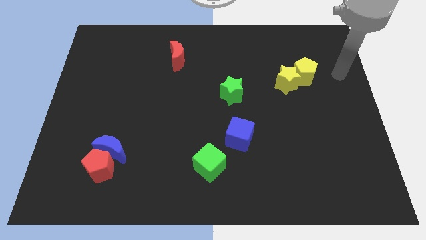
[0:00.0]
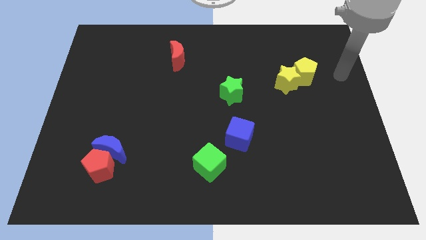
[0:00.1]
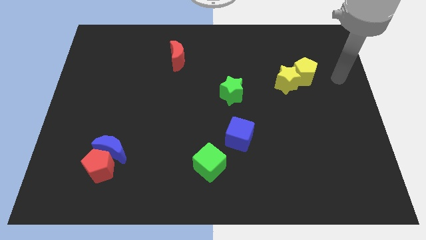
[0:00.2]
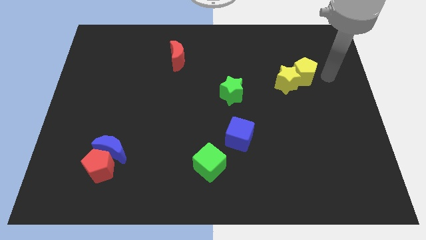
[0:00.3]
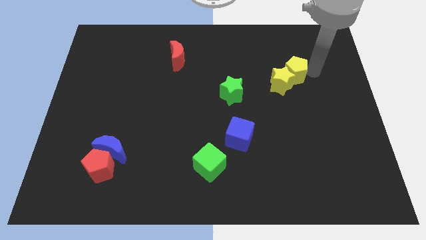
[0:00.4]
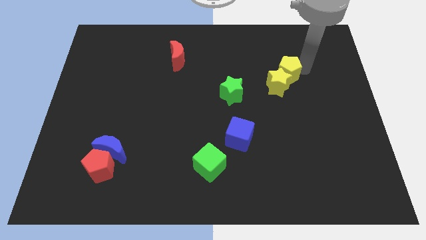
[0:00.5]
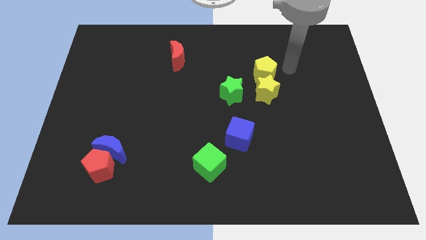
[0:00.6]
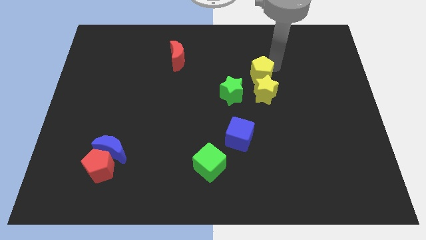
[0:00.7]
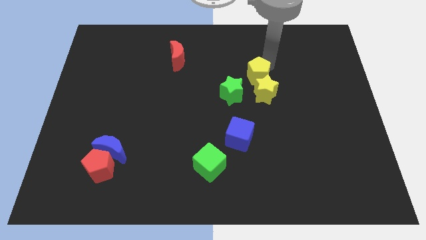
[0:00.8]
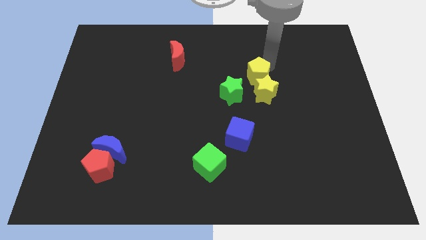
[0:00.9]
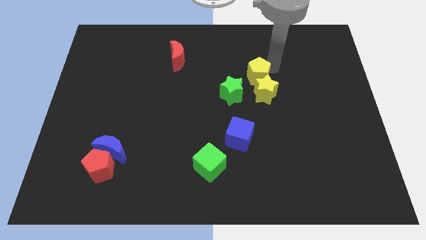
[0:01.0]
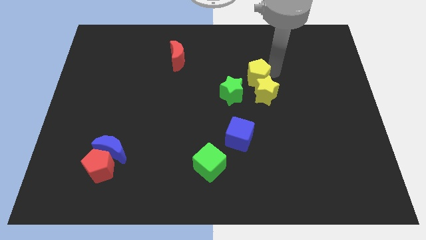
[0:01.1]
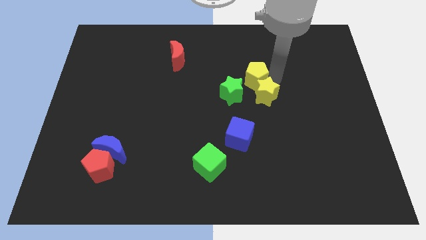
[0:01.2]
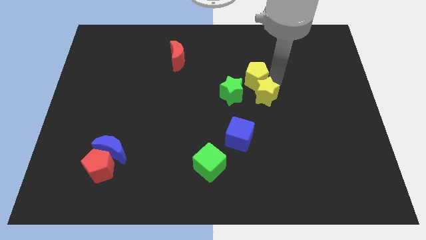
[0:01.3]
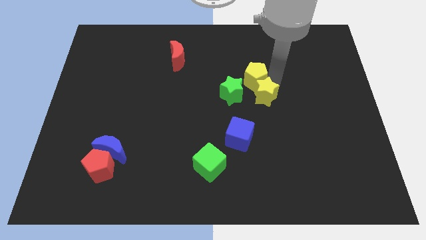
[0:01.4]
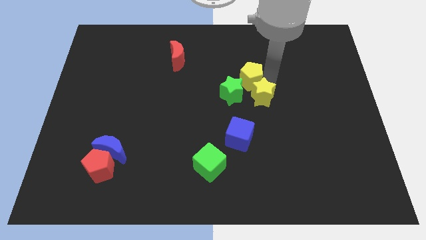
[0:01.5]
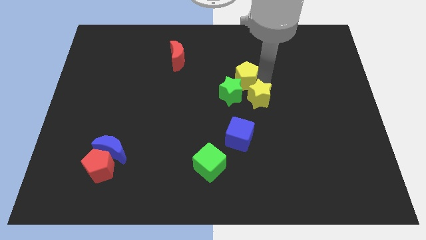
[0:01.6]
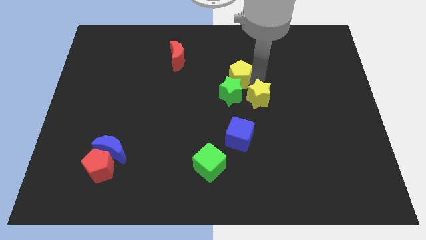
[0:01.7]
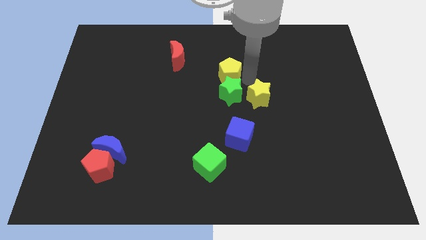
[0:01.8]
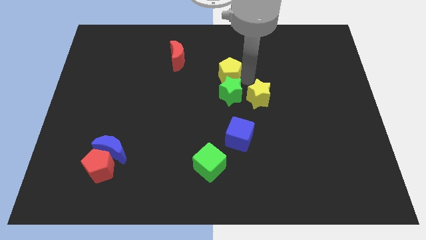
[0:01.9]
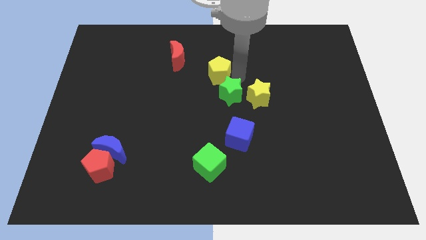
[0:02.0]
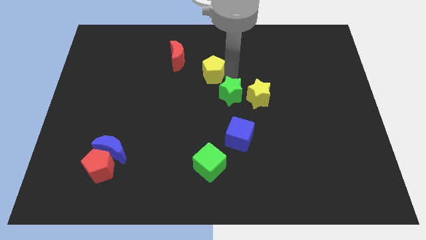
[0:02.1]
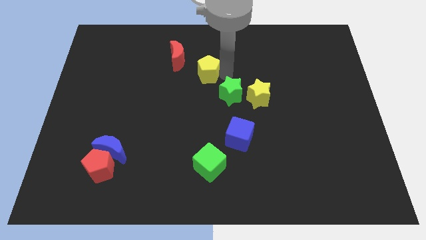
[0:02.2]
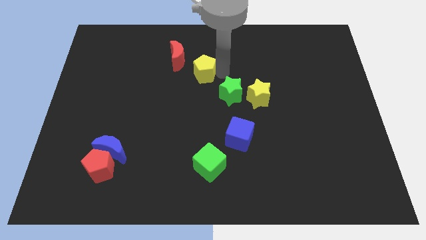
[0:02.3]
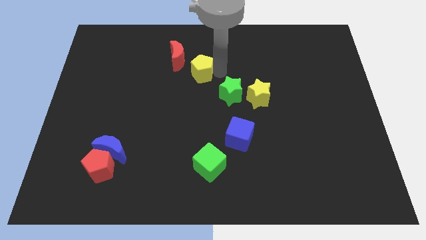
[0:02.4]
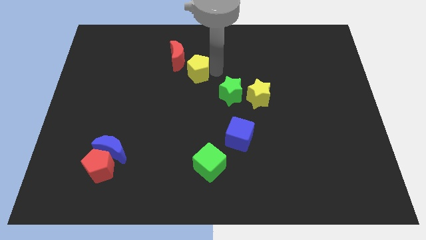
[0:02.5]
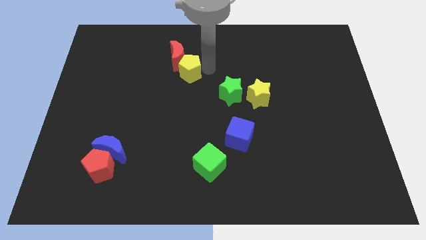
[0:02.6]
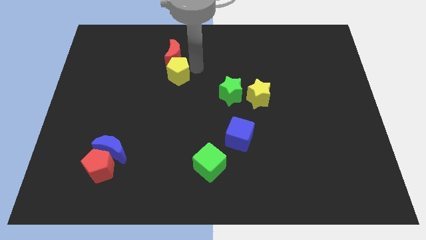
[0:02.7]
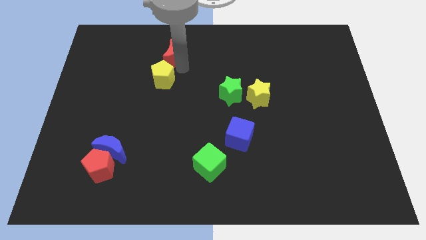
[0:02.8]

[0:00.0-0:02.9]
place yellow pentagon to the bottom of red moon

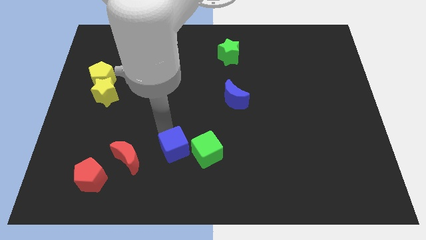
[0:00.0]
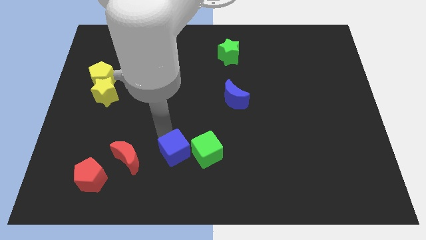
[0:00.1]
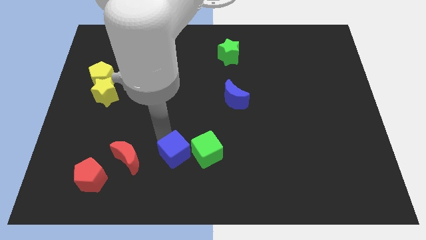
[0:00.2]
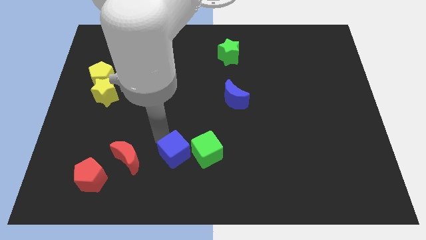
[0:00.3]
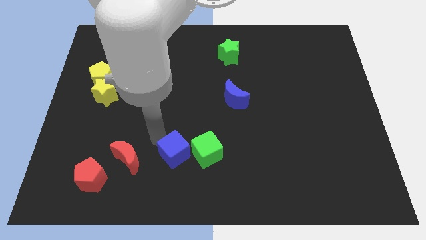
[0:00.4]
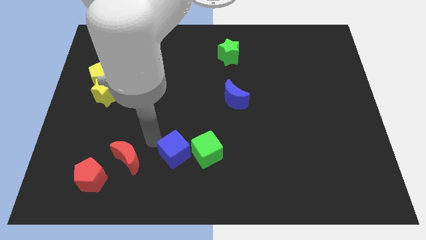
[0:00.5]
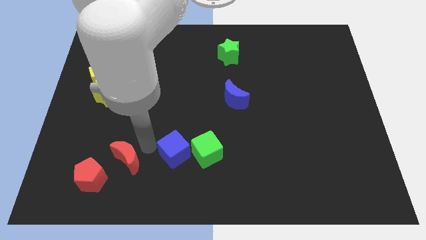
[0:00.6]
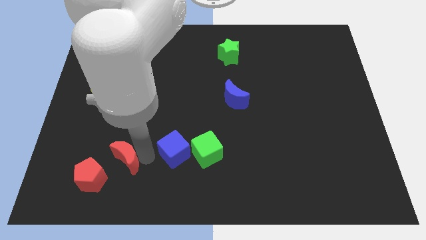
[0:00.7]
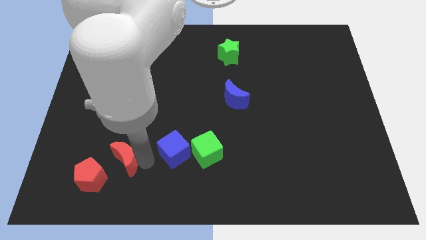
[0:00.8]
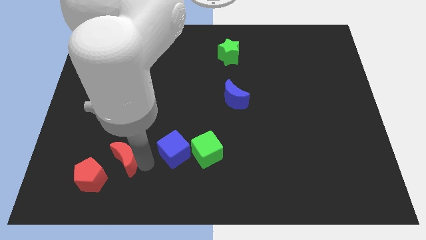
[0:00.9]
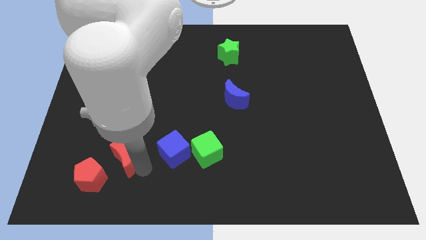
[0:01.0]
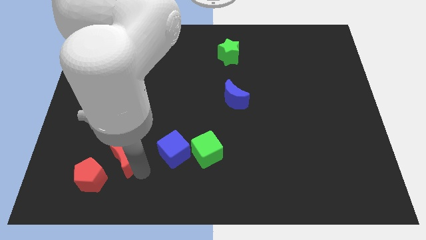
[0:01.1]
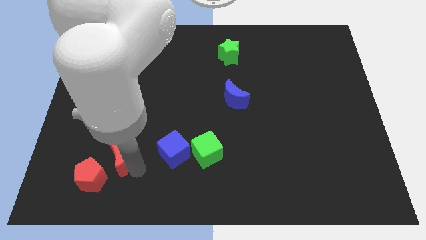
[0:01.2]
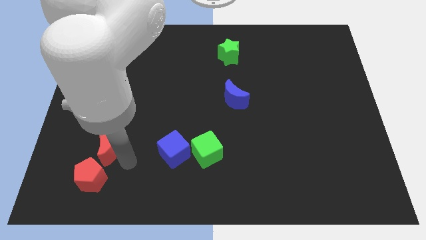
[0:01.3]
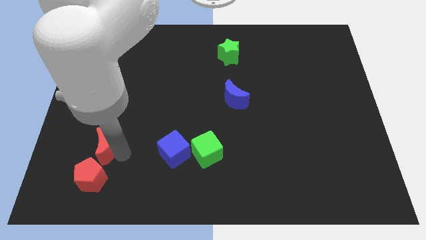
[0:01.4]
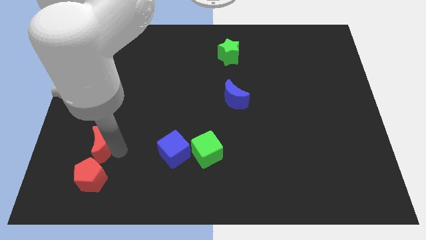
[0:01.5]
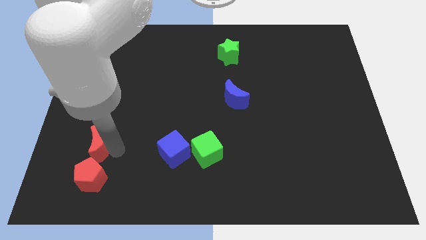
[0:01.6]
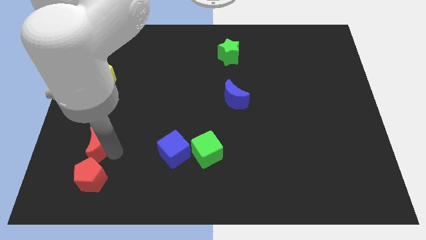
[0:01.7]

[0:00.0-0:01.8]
slide the red moon vertically on top of the red pentagon

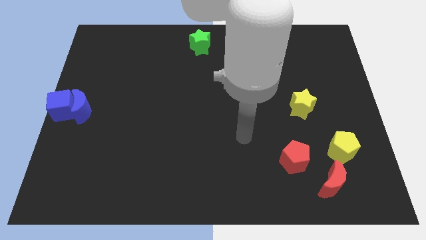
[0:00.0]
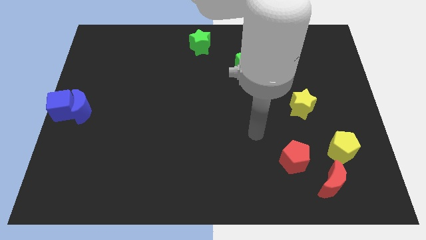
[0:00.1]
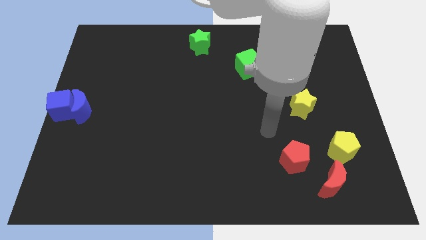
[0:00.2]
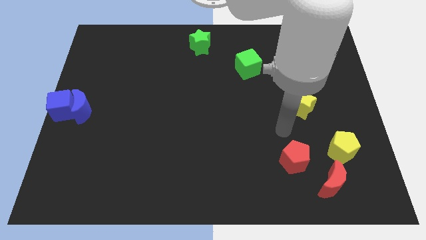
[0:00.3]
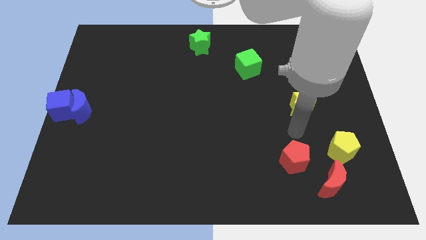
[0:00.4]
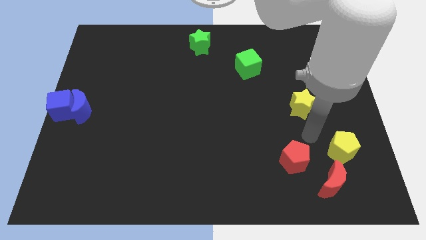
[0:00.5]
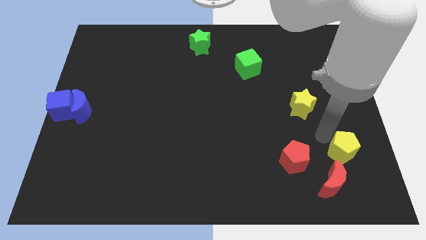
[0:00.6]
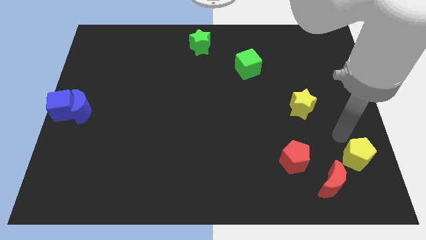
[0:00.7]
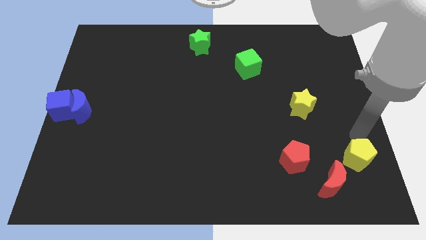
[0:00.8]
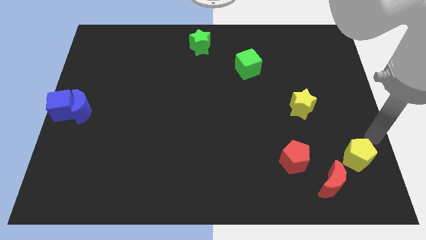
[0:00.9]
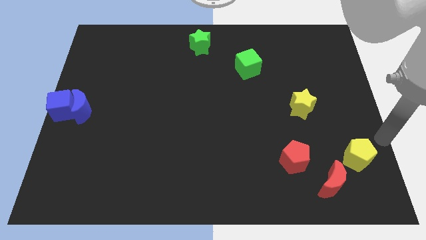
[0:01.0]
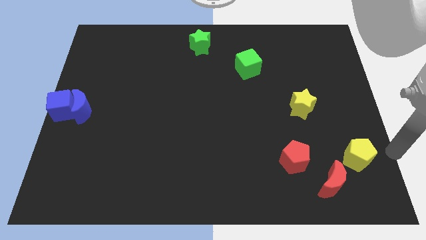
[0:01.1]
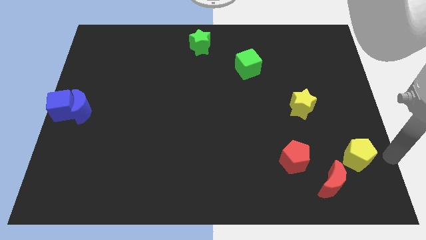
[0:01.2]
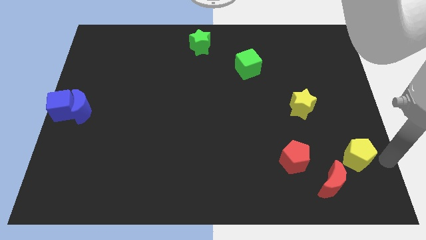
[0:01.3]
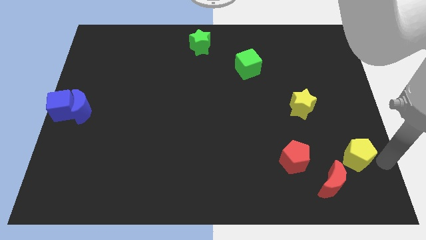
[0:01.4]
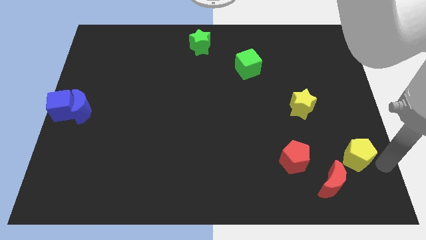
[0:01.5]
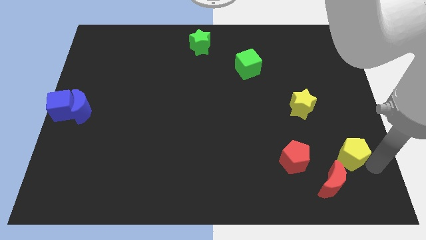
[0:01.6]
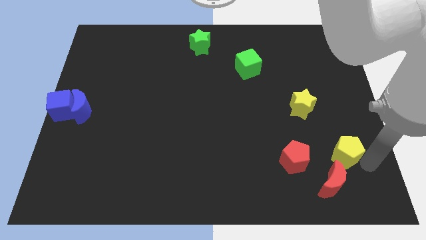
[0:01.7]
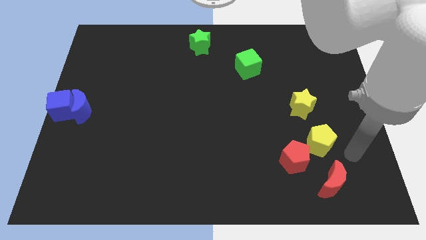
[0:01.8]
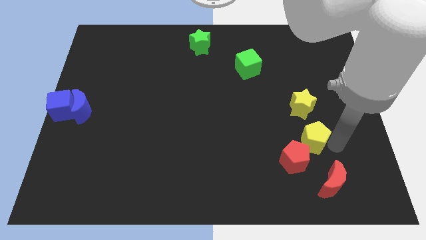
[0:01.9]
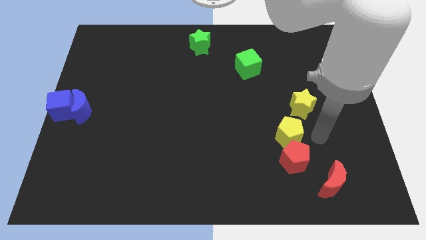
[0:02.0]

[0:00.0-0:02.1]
separate the yellow pentagon from the red crescent

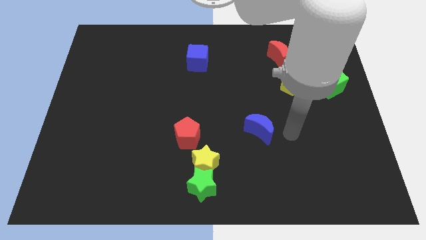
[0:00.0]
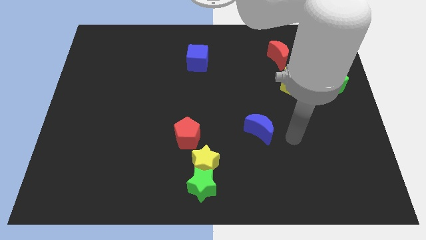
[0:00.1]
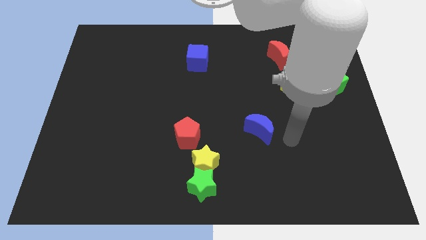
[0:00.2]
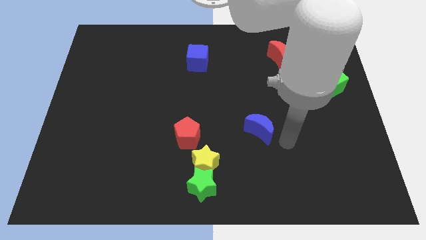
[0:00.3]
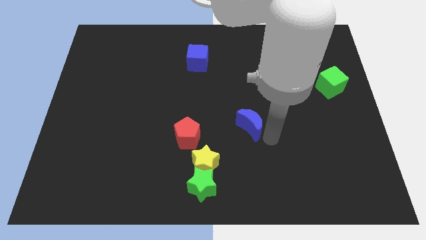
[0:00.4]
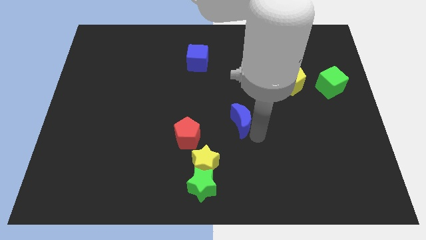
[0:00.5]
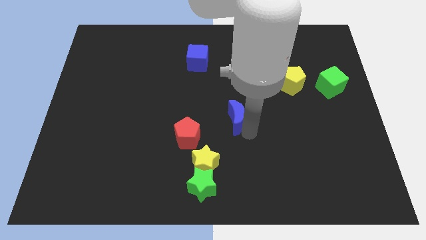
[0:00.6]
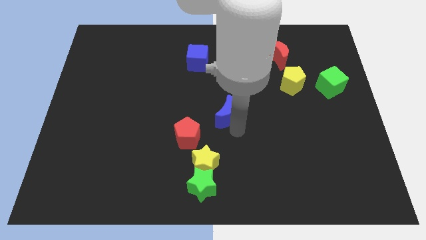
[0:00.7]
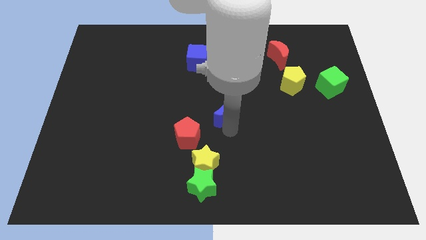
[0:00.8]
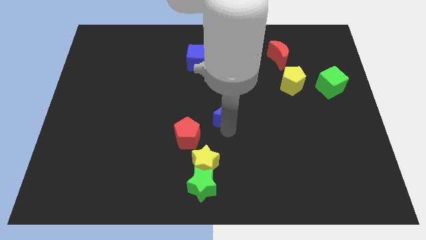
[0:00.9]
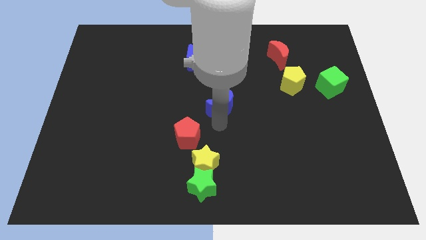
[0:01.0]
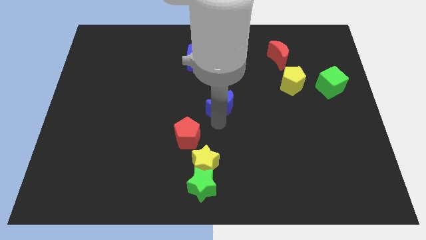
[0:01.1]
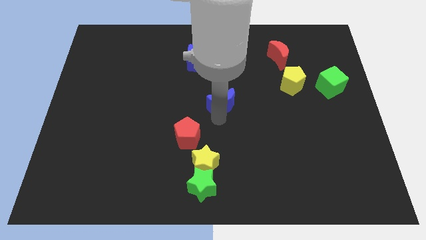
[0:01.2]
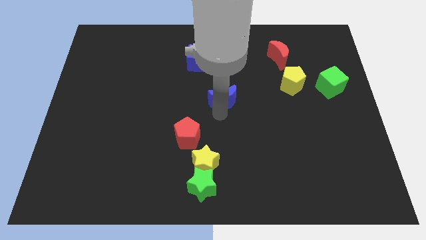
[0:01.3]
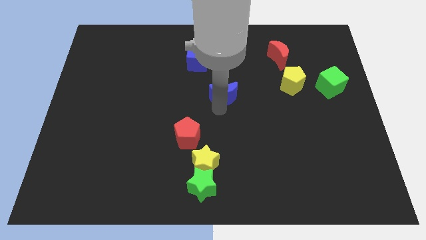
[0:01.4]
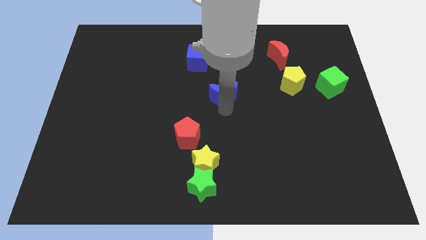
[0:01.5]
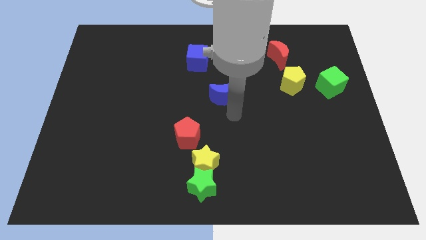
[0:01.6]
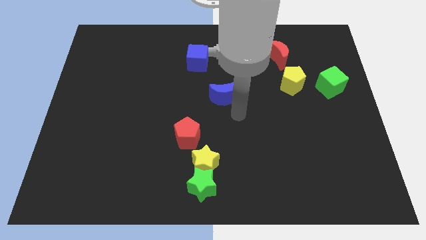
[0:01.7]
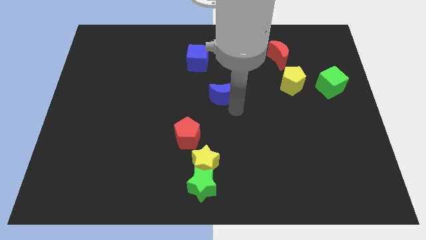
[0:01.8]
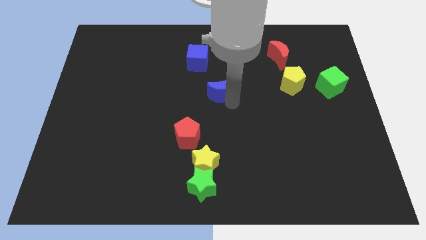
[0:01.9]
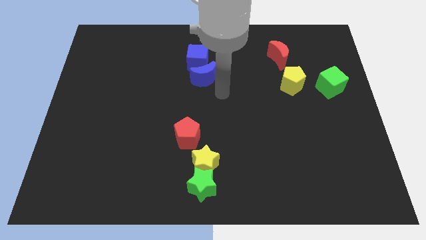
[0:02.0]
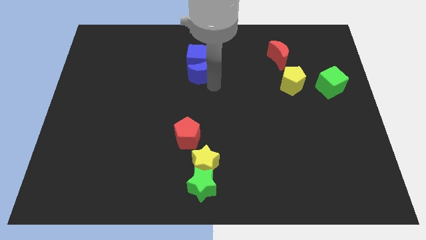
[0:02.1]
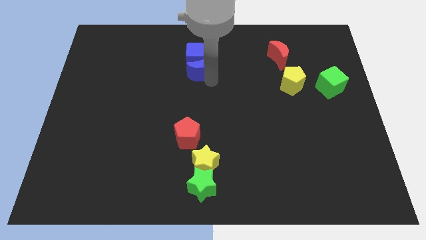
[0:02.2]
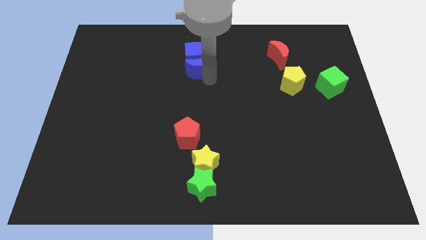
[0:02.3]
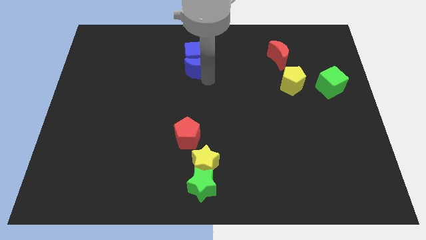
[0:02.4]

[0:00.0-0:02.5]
place blue crescent below blue blue cube
